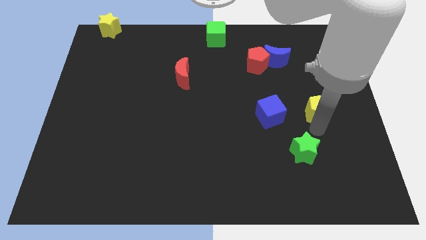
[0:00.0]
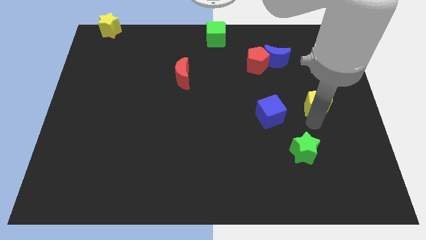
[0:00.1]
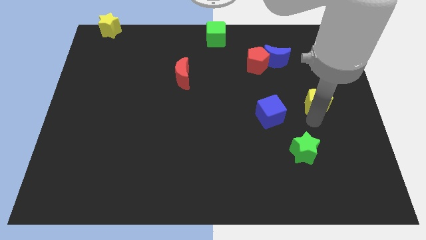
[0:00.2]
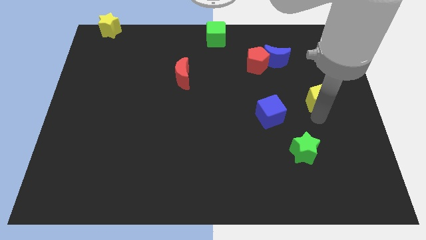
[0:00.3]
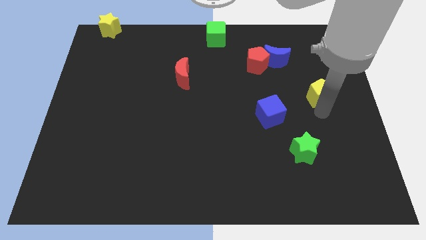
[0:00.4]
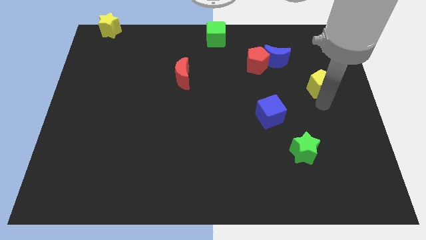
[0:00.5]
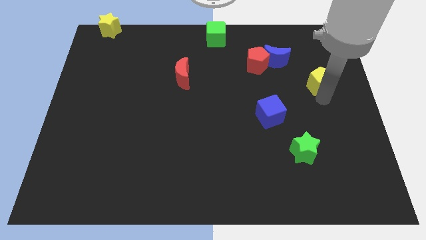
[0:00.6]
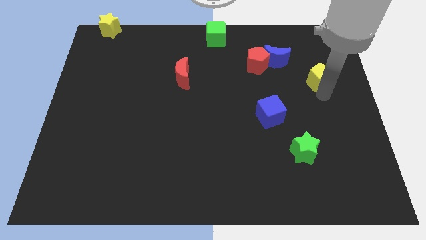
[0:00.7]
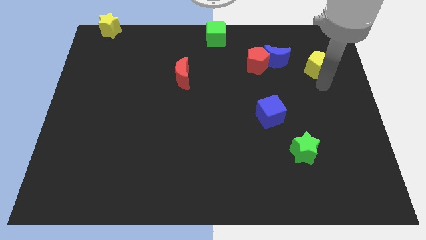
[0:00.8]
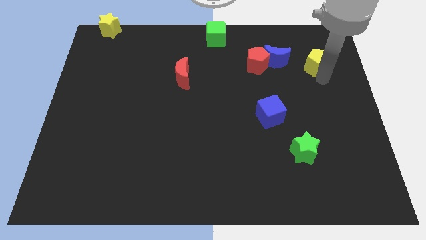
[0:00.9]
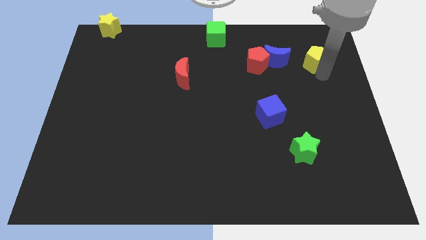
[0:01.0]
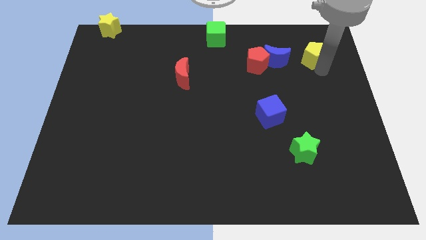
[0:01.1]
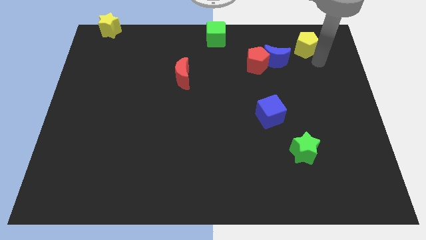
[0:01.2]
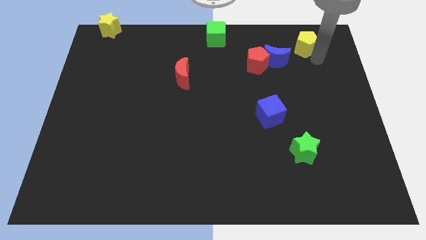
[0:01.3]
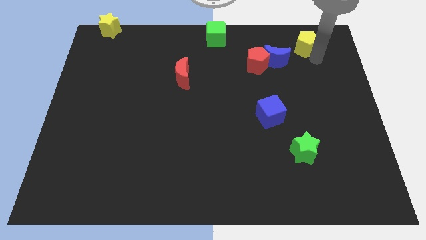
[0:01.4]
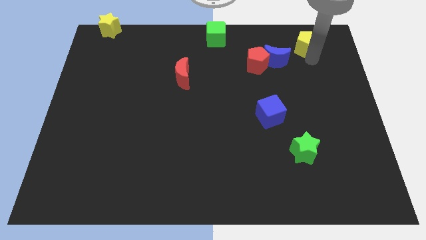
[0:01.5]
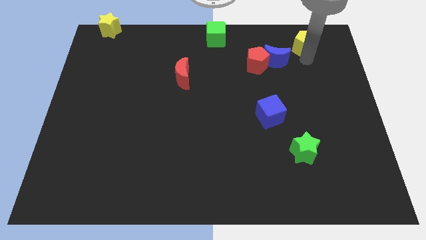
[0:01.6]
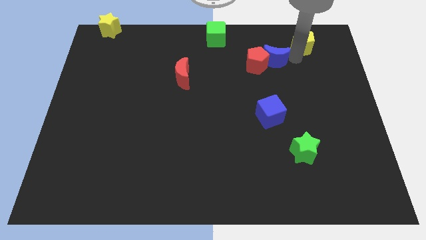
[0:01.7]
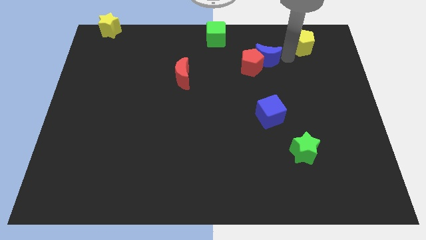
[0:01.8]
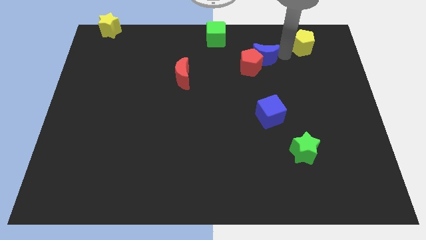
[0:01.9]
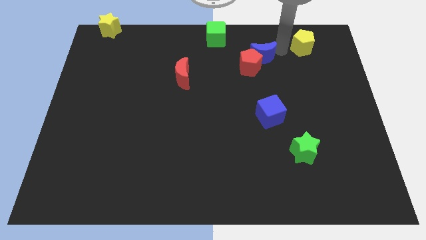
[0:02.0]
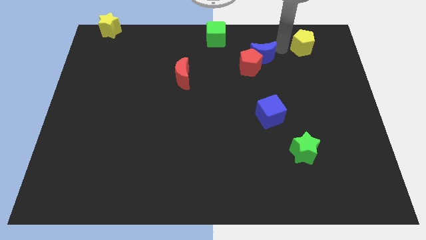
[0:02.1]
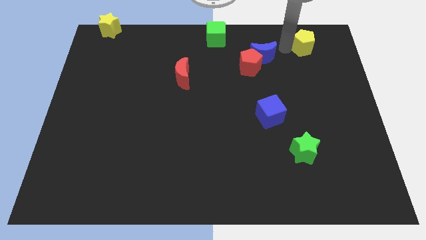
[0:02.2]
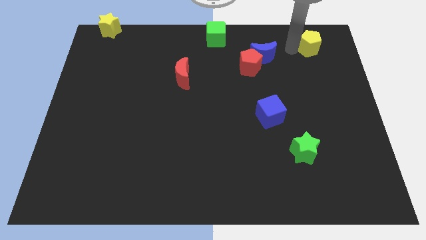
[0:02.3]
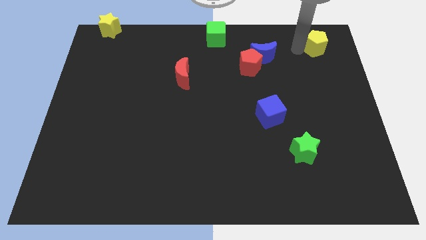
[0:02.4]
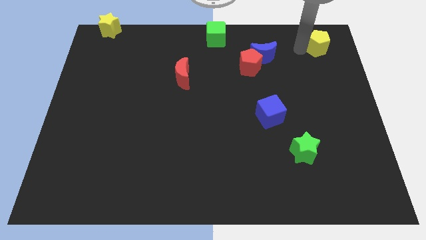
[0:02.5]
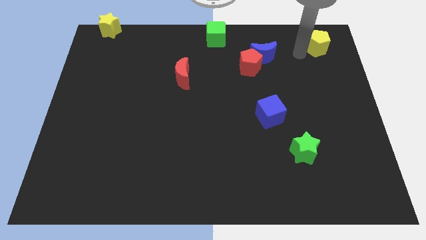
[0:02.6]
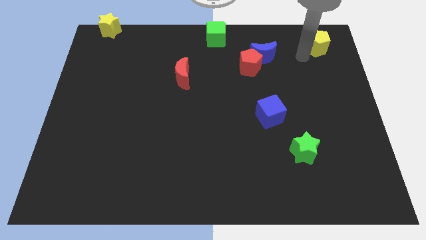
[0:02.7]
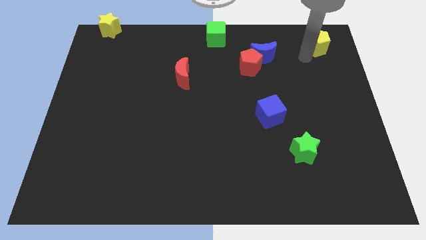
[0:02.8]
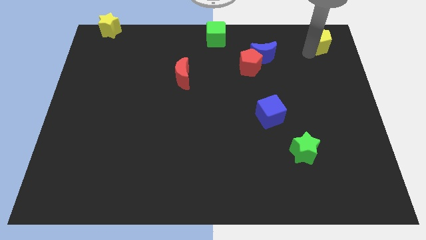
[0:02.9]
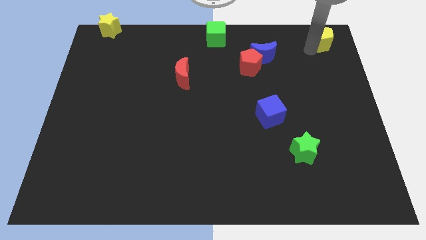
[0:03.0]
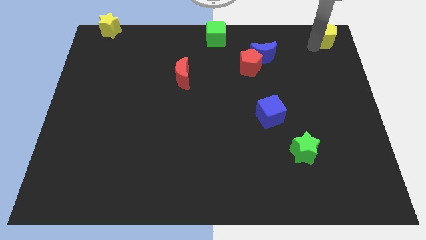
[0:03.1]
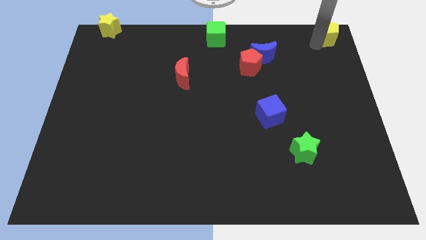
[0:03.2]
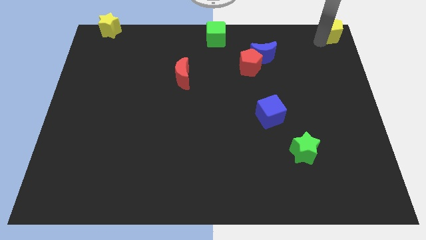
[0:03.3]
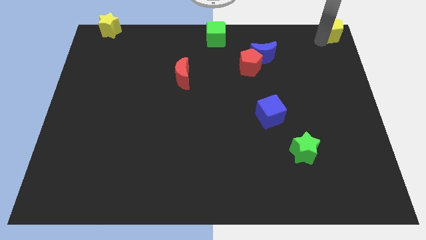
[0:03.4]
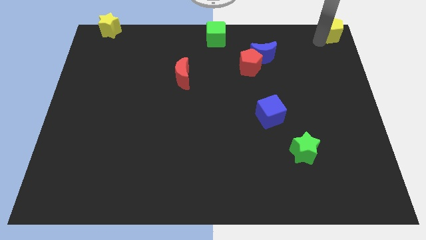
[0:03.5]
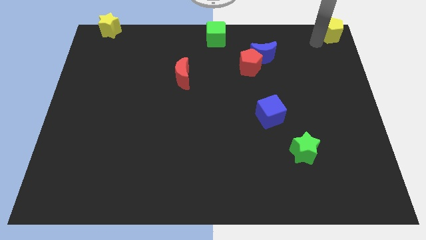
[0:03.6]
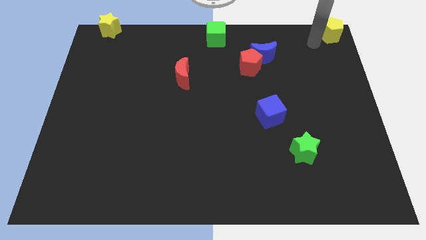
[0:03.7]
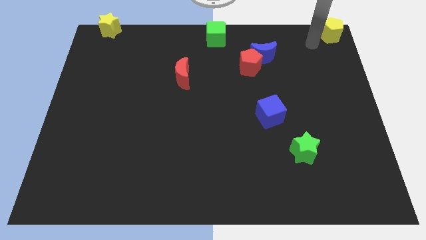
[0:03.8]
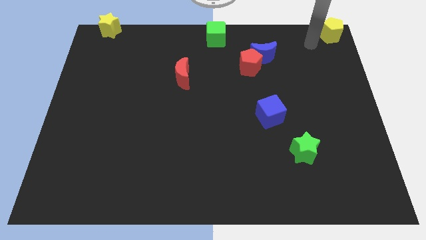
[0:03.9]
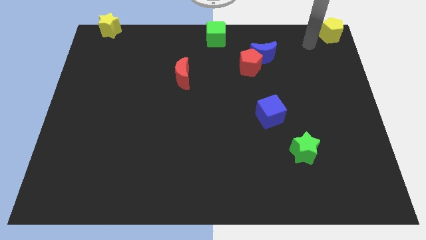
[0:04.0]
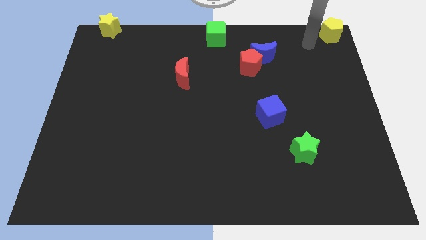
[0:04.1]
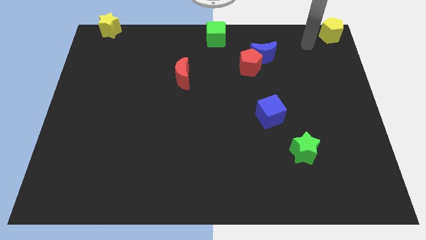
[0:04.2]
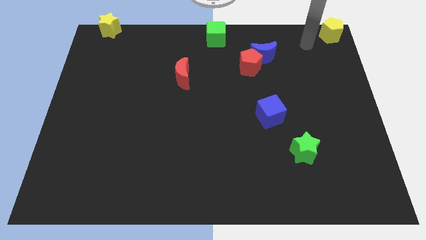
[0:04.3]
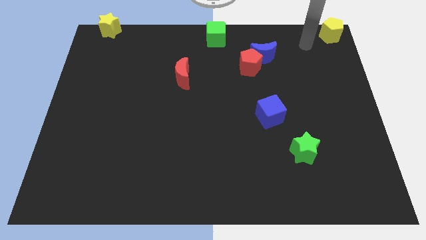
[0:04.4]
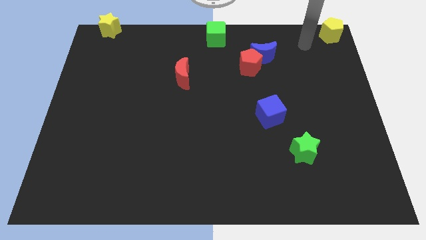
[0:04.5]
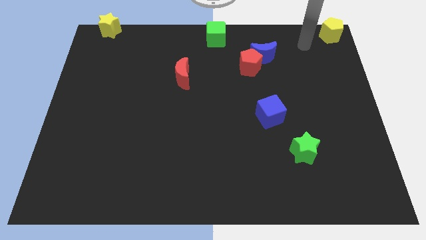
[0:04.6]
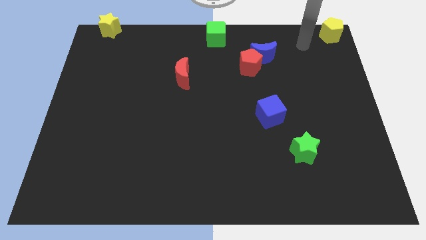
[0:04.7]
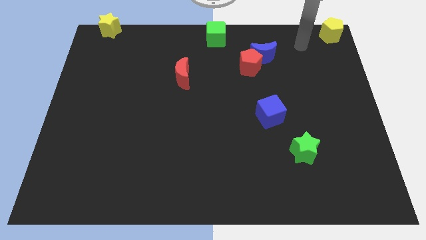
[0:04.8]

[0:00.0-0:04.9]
put the yellow pentagon at the top right corner of the board

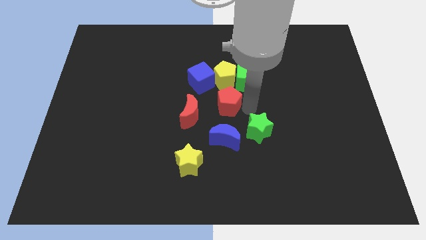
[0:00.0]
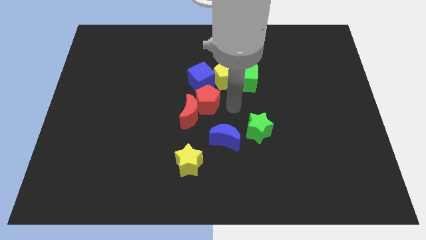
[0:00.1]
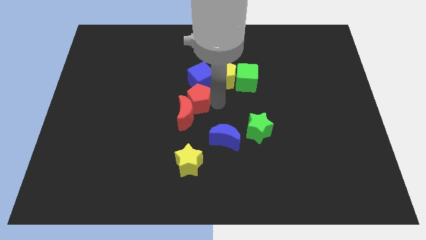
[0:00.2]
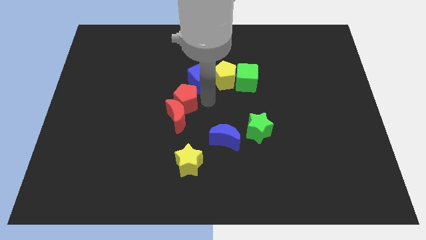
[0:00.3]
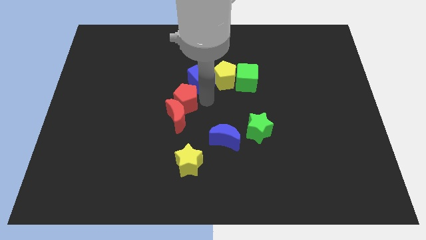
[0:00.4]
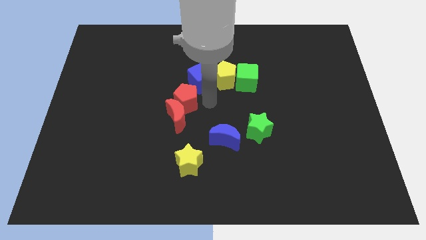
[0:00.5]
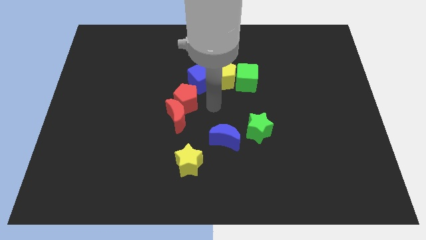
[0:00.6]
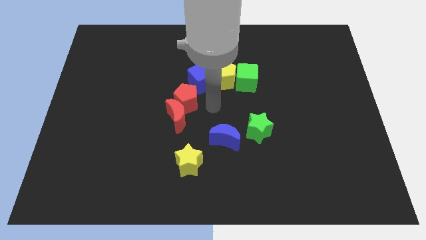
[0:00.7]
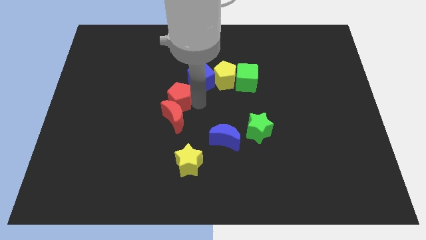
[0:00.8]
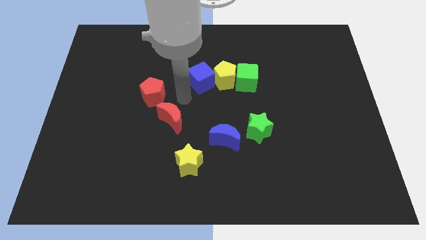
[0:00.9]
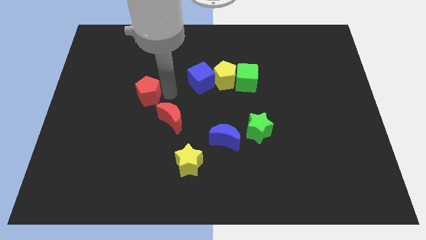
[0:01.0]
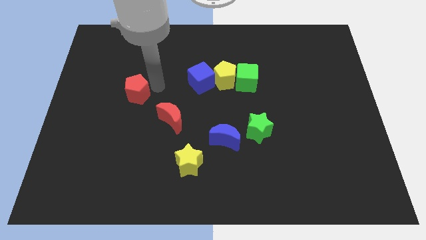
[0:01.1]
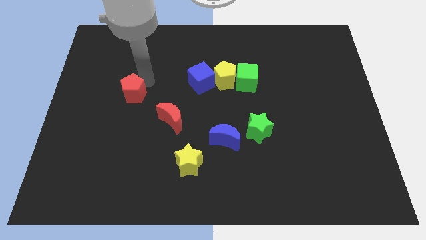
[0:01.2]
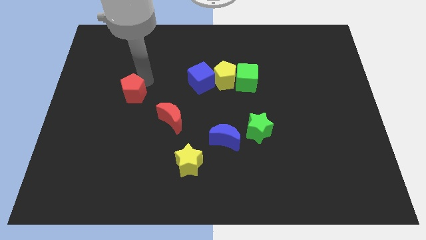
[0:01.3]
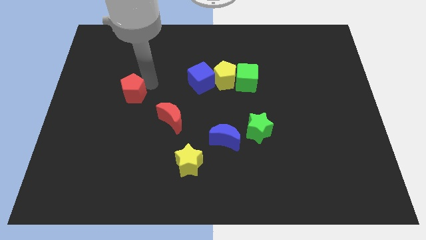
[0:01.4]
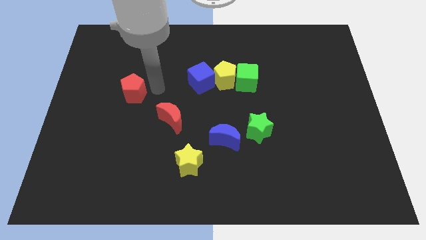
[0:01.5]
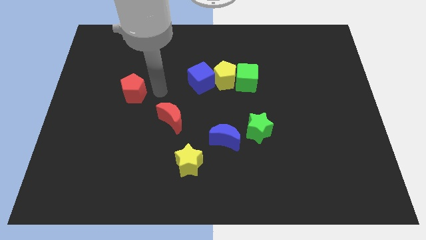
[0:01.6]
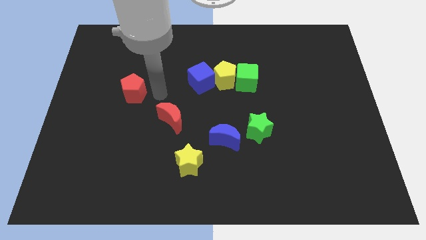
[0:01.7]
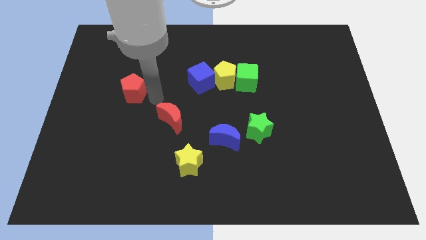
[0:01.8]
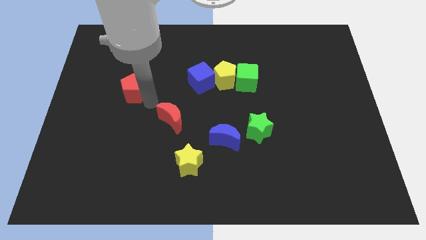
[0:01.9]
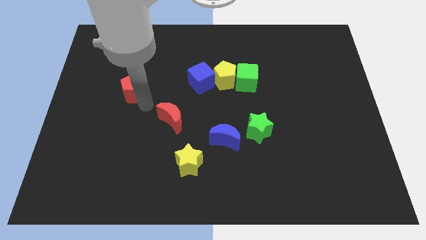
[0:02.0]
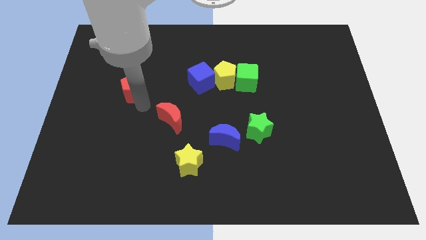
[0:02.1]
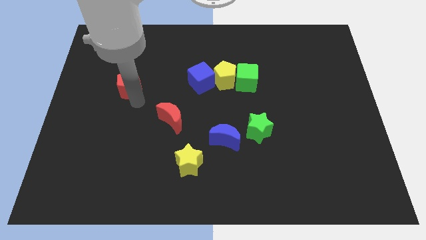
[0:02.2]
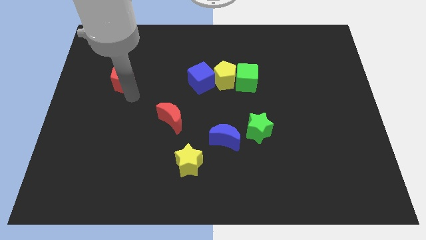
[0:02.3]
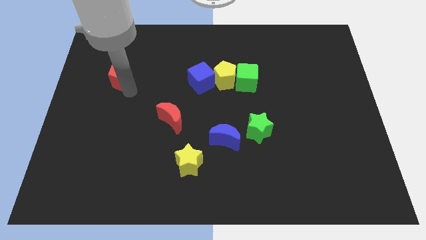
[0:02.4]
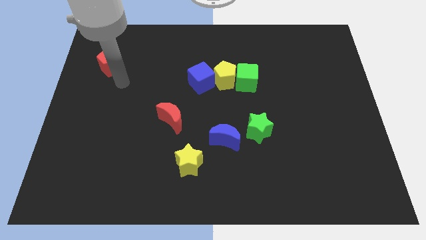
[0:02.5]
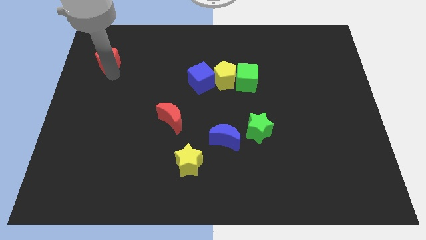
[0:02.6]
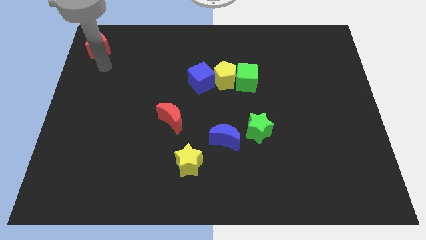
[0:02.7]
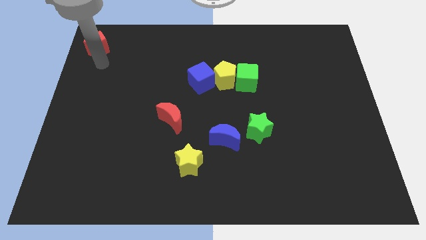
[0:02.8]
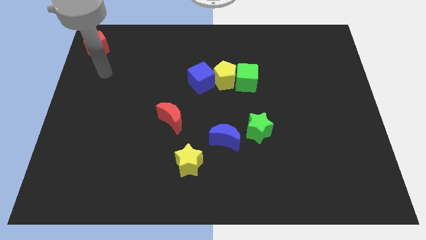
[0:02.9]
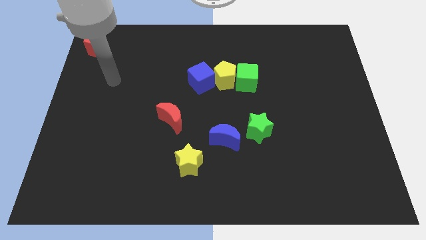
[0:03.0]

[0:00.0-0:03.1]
take the red pentagon to the top left corner of the board

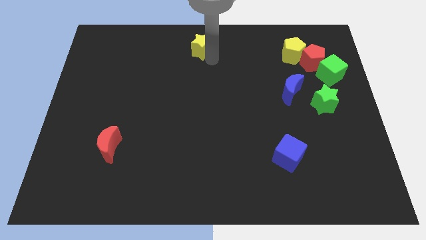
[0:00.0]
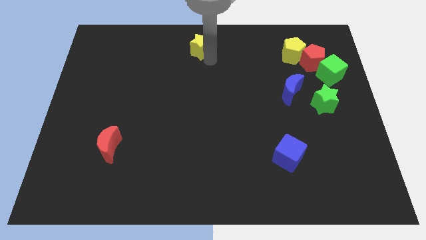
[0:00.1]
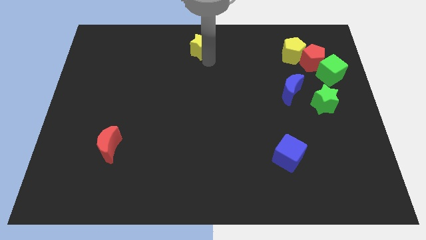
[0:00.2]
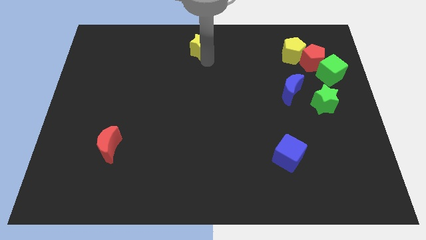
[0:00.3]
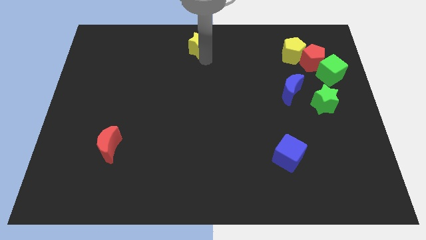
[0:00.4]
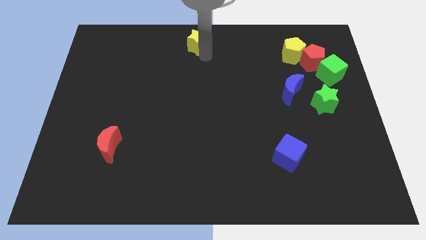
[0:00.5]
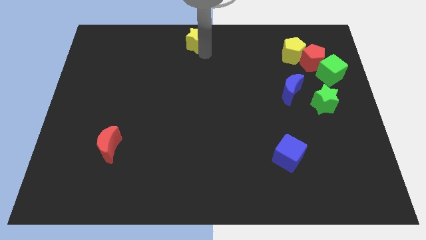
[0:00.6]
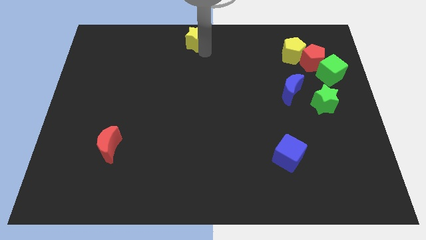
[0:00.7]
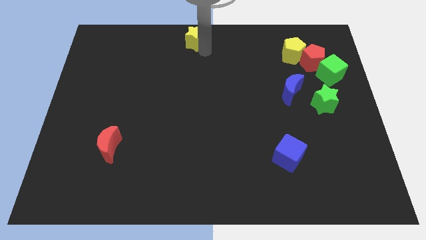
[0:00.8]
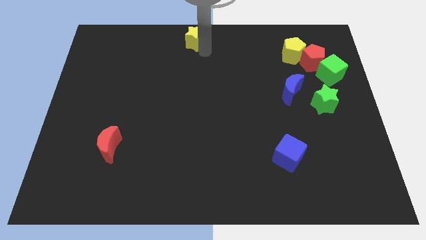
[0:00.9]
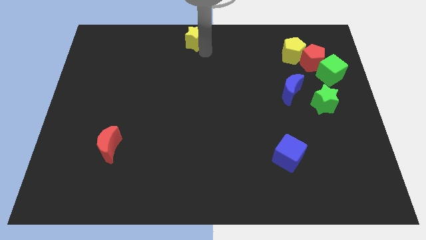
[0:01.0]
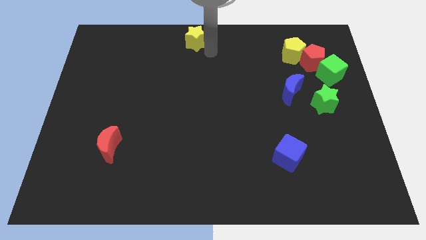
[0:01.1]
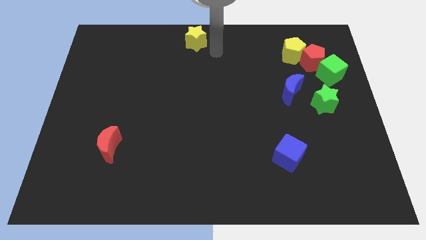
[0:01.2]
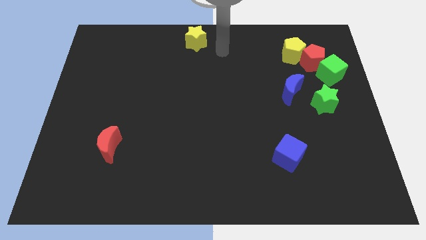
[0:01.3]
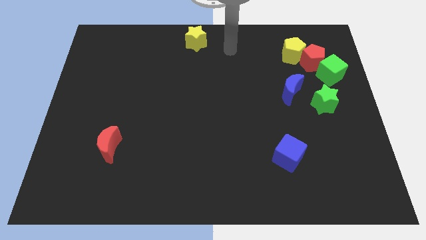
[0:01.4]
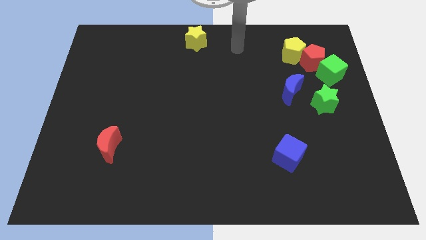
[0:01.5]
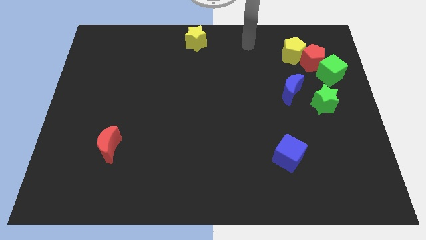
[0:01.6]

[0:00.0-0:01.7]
move the yellow star to the top center of the board
